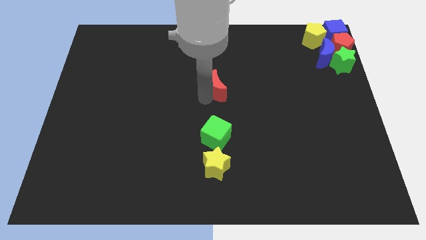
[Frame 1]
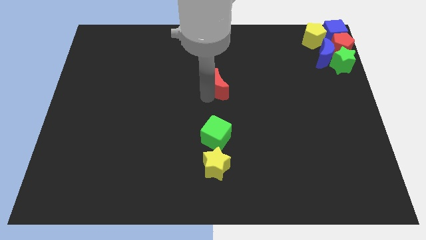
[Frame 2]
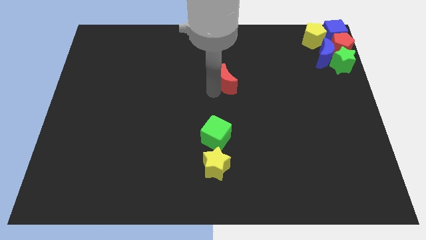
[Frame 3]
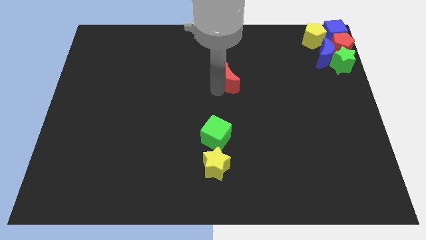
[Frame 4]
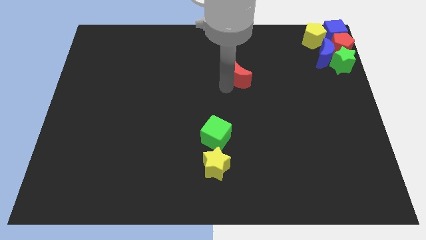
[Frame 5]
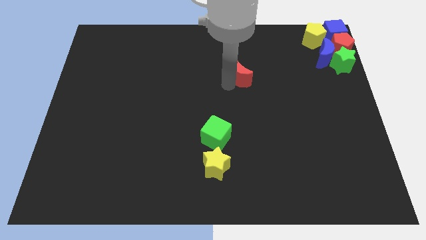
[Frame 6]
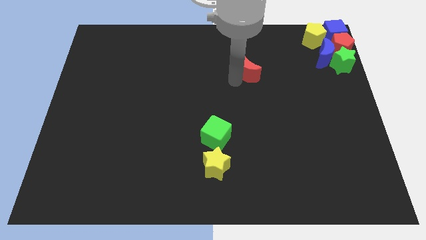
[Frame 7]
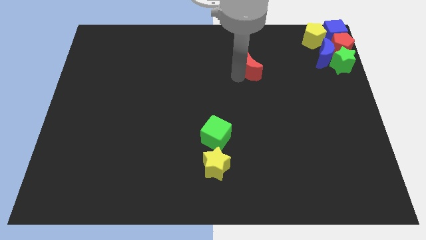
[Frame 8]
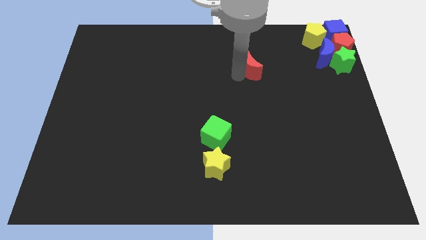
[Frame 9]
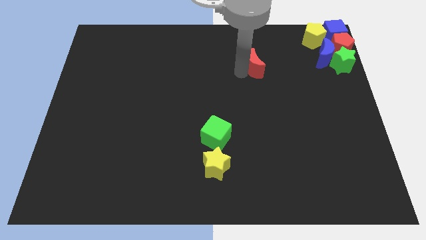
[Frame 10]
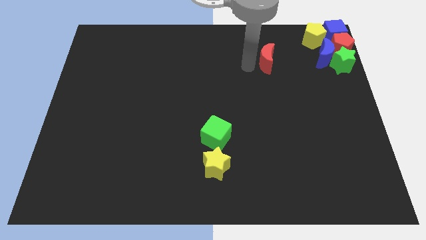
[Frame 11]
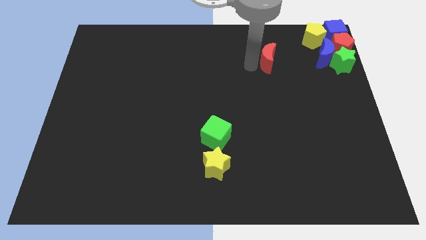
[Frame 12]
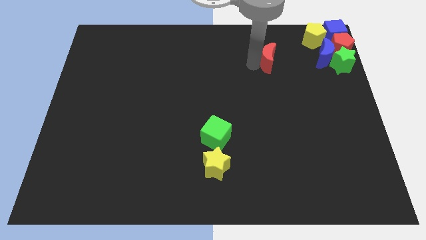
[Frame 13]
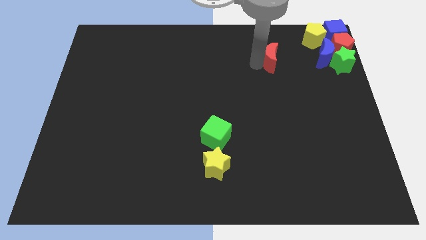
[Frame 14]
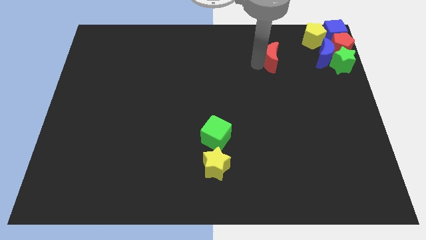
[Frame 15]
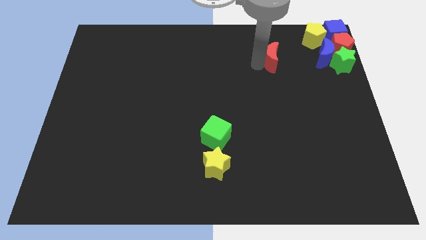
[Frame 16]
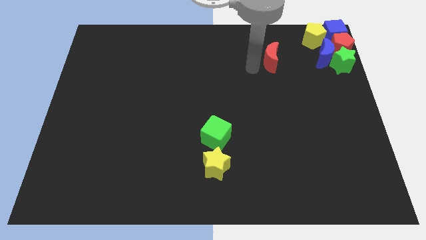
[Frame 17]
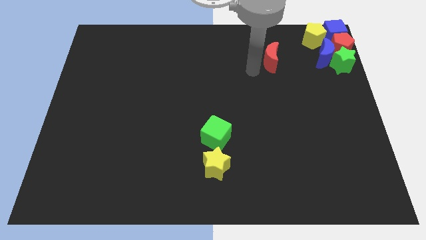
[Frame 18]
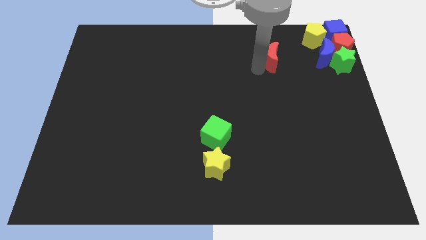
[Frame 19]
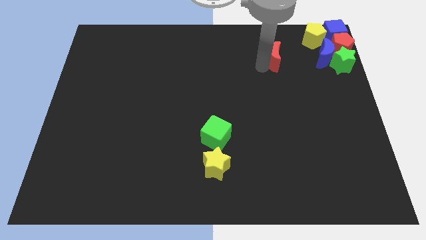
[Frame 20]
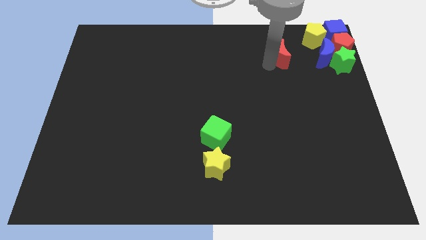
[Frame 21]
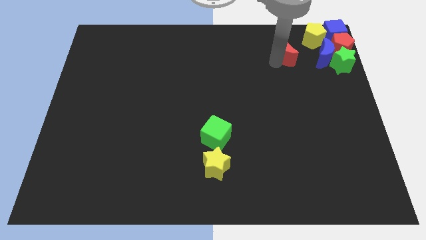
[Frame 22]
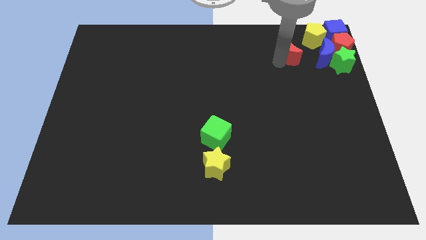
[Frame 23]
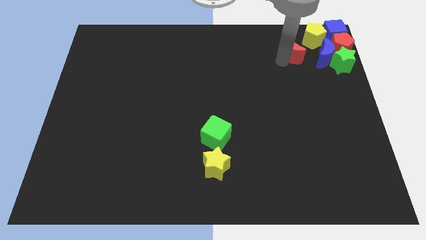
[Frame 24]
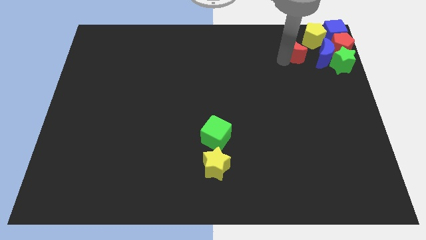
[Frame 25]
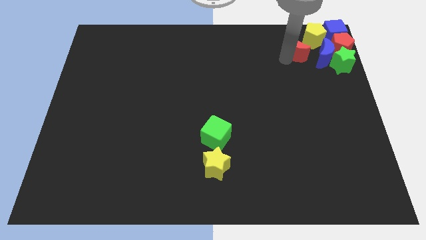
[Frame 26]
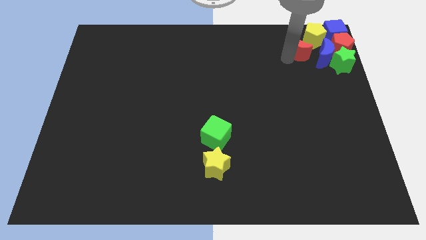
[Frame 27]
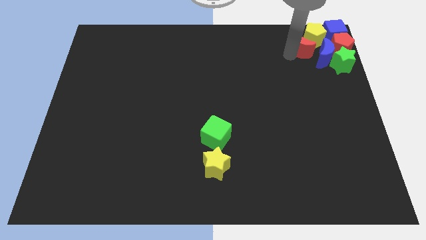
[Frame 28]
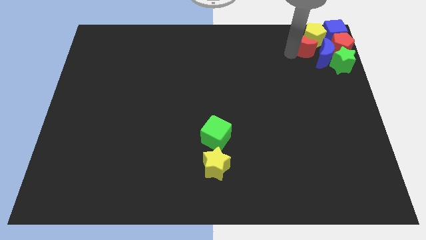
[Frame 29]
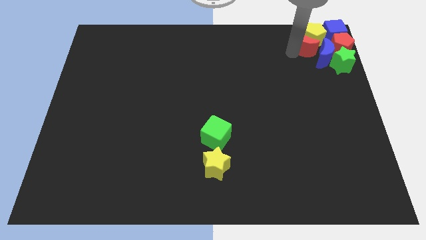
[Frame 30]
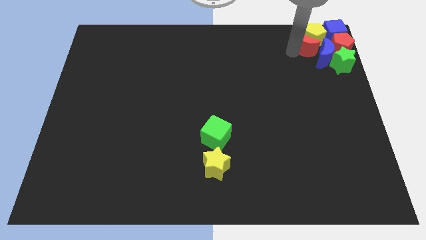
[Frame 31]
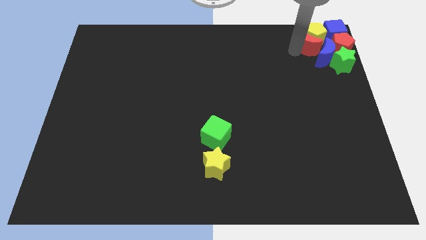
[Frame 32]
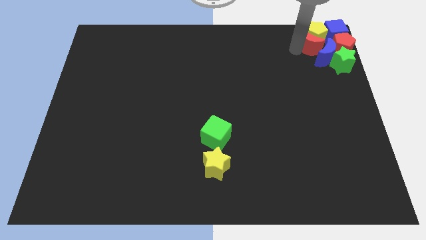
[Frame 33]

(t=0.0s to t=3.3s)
push the red crescent into the yellow pentagon

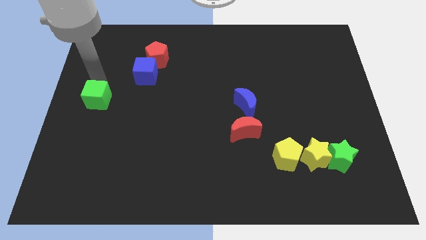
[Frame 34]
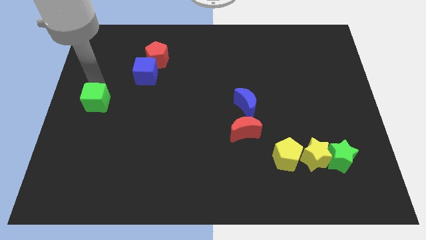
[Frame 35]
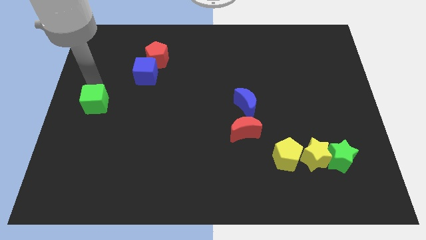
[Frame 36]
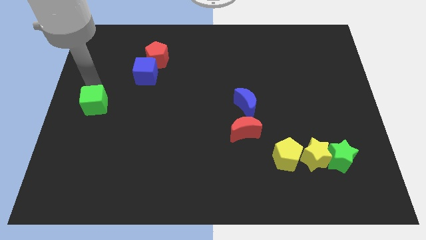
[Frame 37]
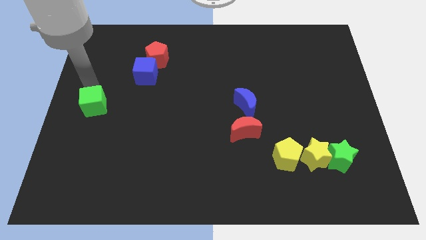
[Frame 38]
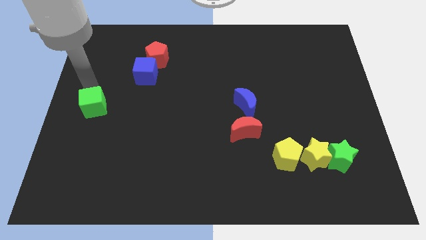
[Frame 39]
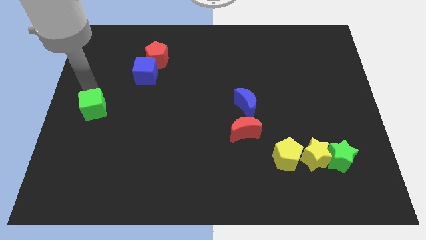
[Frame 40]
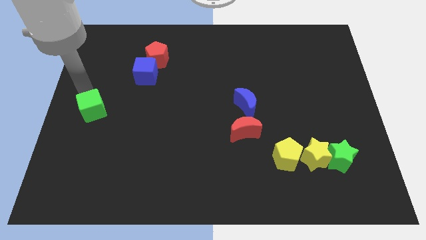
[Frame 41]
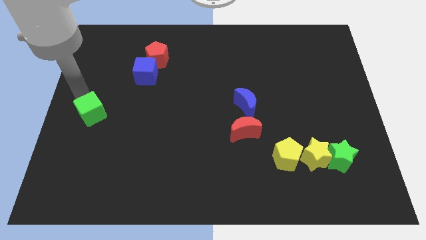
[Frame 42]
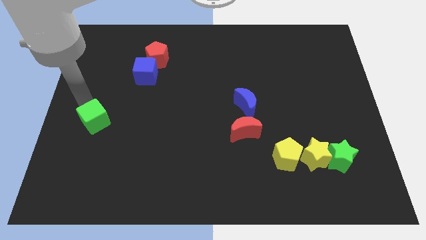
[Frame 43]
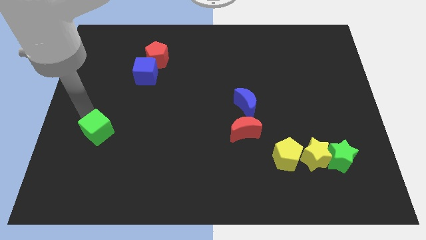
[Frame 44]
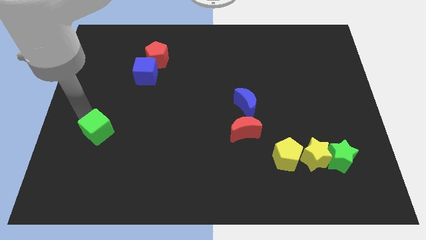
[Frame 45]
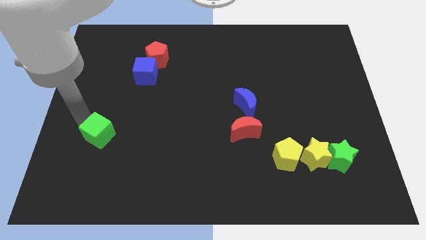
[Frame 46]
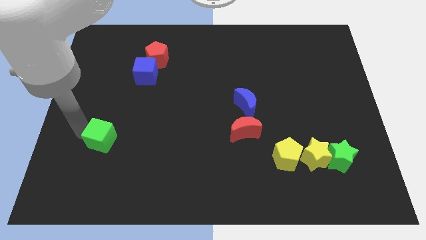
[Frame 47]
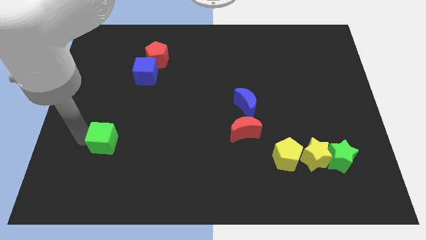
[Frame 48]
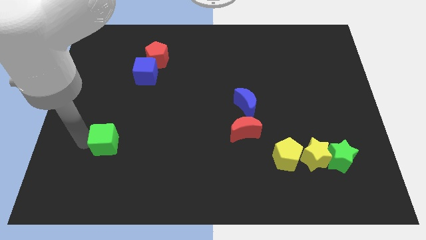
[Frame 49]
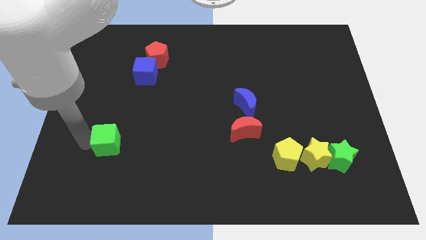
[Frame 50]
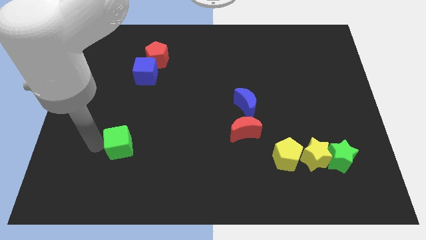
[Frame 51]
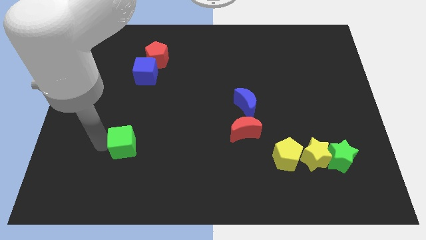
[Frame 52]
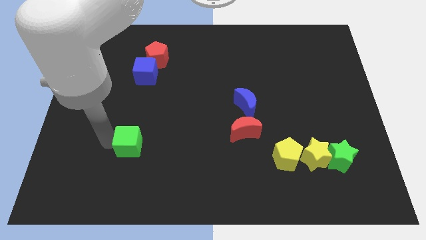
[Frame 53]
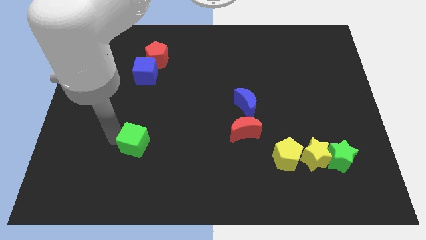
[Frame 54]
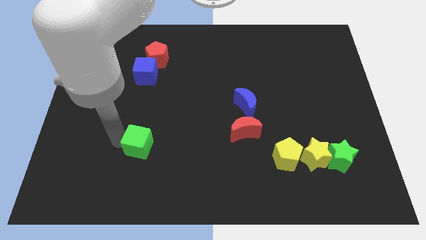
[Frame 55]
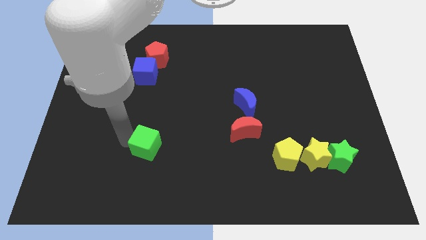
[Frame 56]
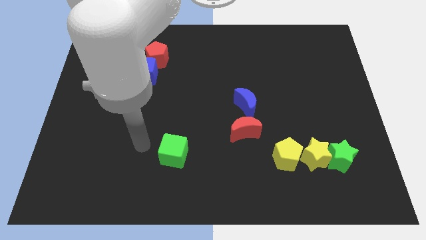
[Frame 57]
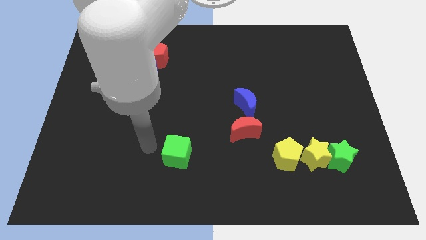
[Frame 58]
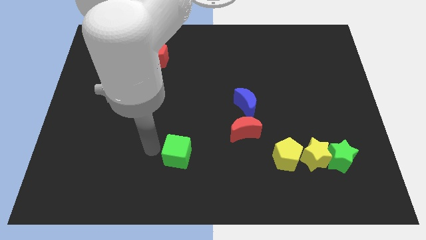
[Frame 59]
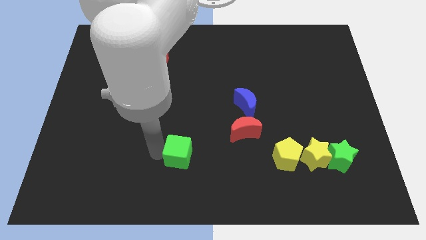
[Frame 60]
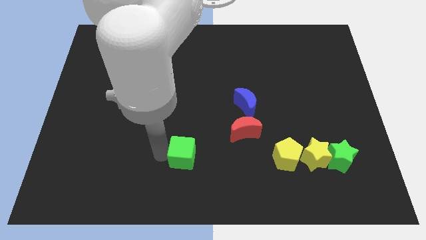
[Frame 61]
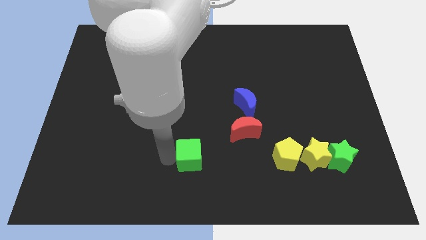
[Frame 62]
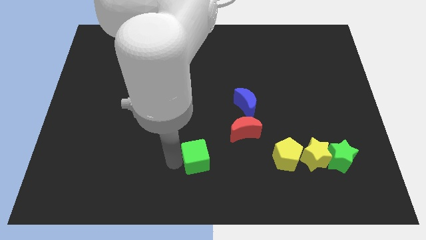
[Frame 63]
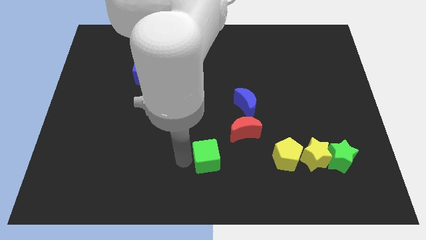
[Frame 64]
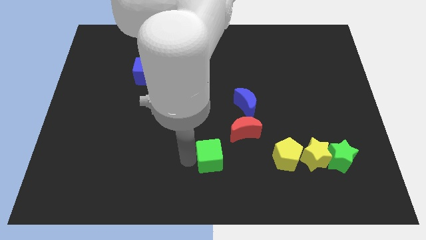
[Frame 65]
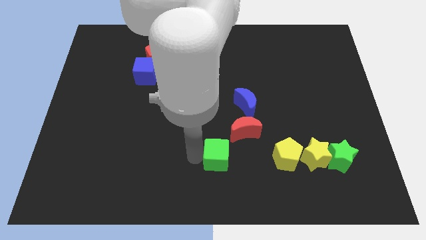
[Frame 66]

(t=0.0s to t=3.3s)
drag green cube diagonally below the red moon

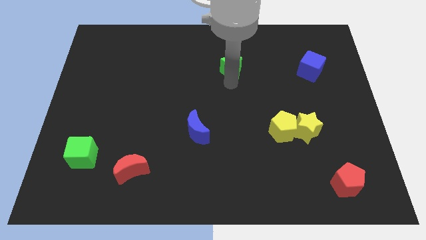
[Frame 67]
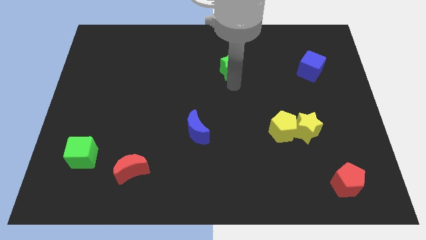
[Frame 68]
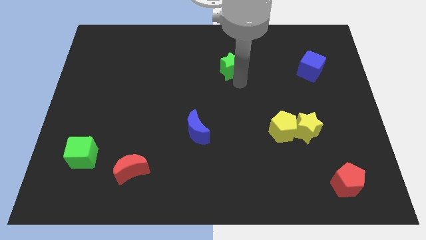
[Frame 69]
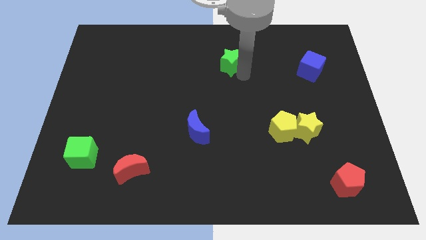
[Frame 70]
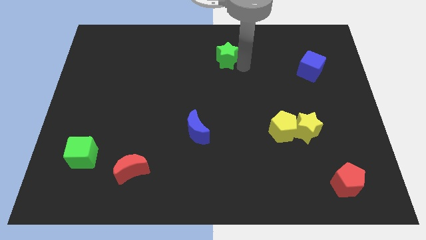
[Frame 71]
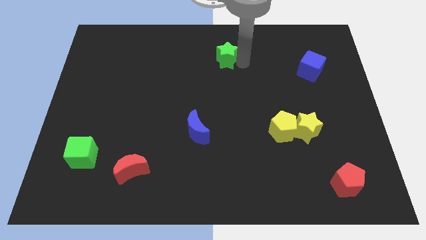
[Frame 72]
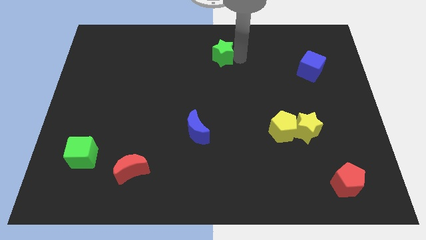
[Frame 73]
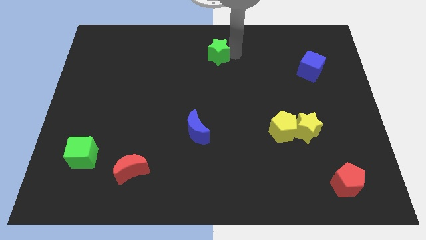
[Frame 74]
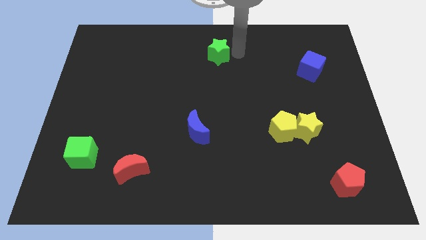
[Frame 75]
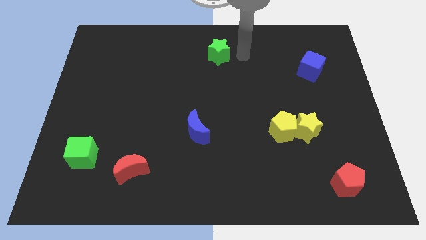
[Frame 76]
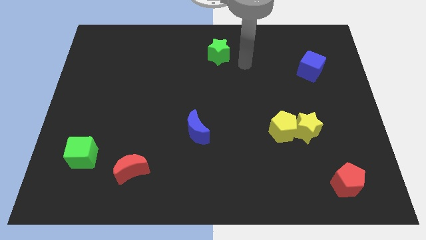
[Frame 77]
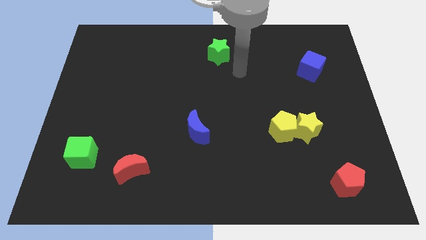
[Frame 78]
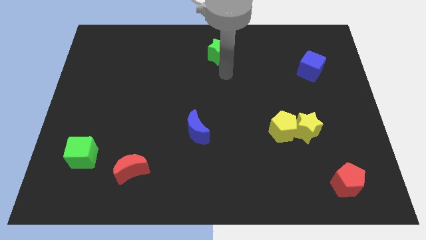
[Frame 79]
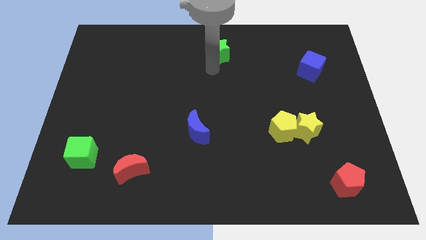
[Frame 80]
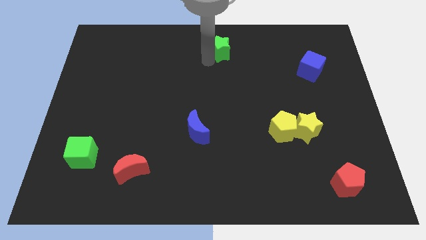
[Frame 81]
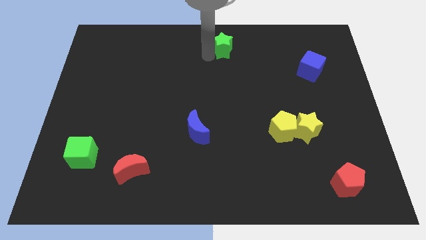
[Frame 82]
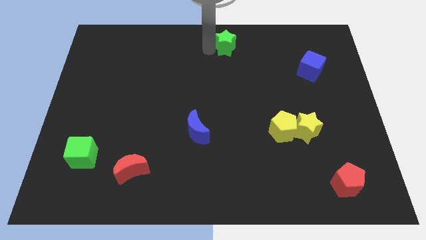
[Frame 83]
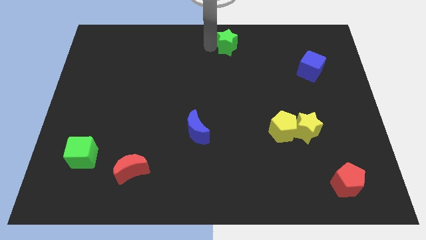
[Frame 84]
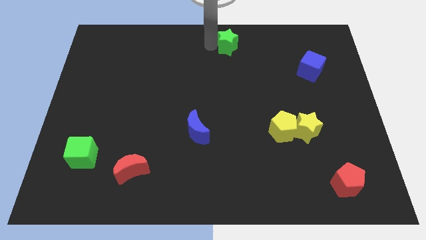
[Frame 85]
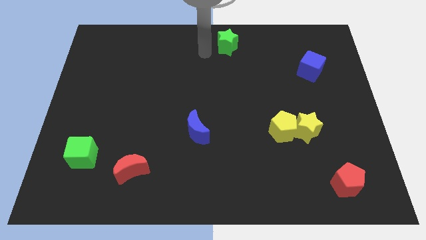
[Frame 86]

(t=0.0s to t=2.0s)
place green star to the top center of the board

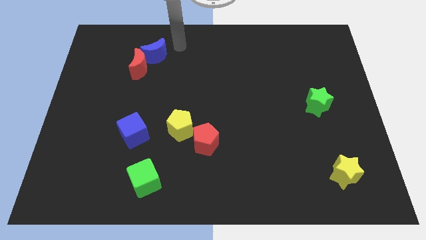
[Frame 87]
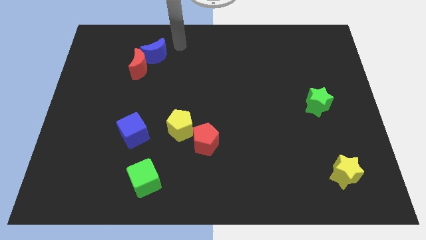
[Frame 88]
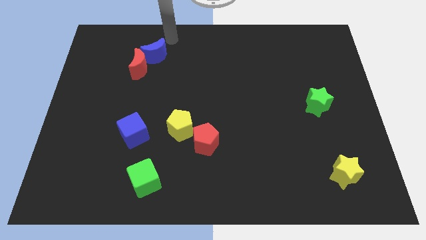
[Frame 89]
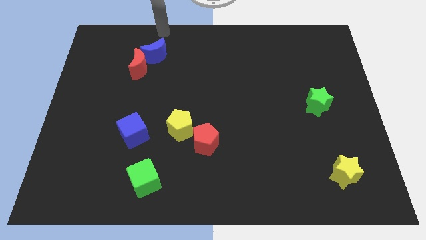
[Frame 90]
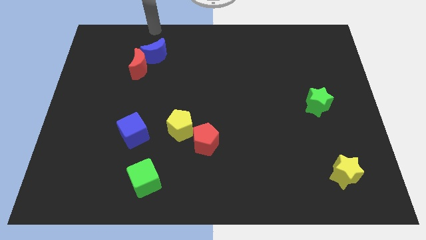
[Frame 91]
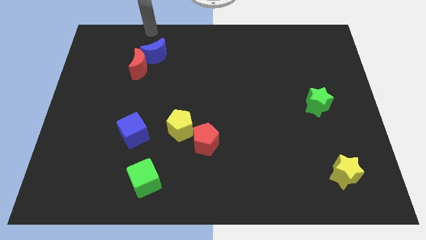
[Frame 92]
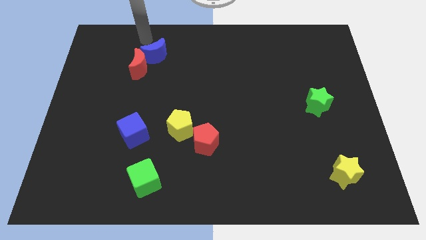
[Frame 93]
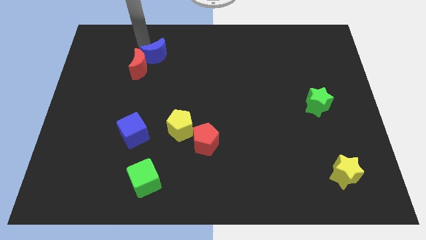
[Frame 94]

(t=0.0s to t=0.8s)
move the arm away from the blue crescent
